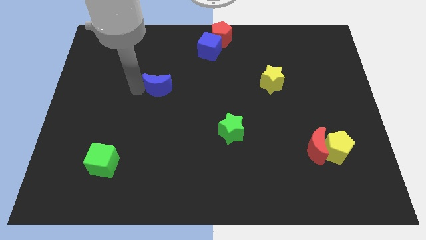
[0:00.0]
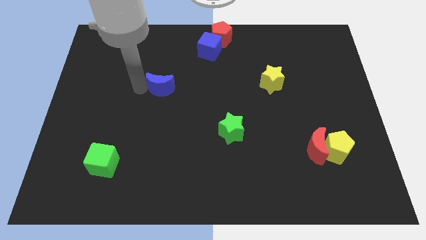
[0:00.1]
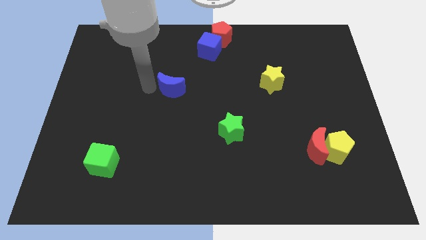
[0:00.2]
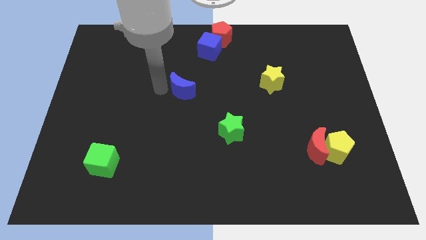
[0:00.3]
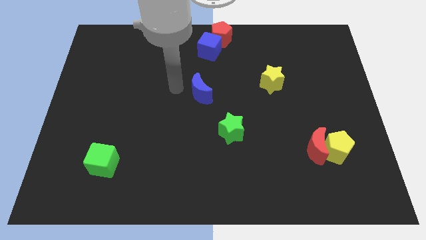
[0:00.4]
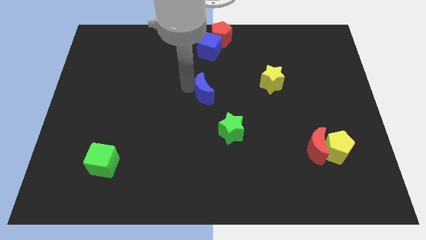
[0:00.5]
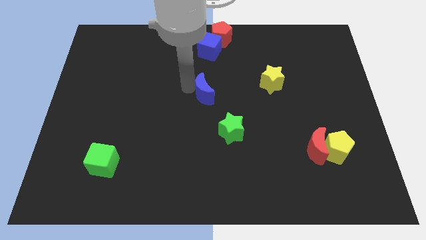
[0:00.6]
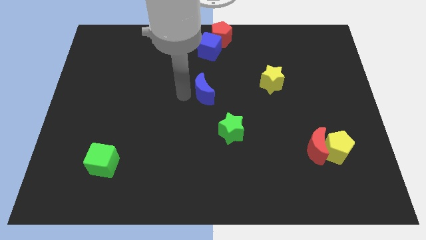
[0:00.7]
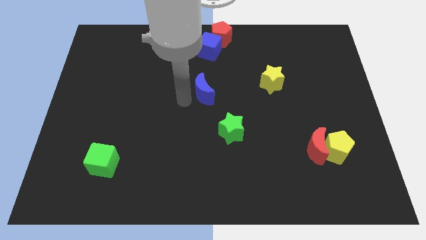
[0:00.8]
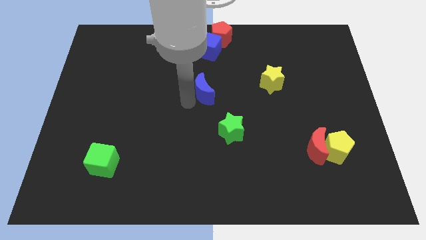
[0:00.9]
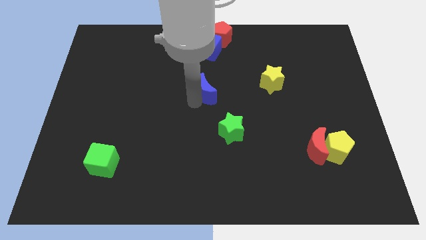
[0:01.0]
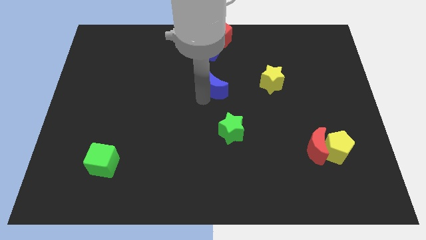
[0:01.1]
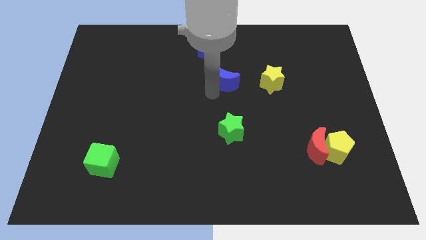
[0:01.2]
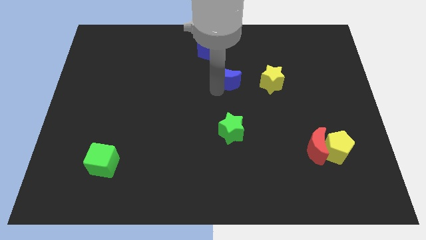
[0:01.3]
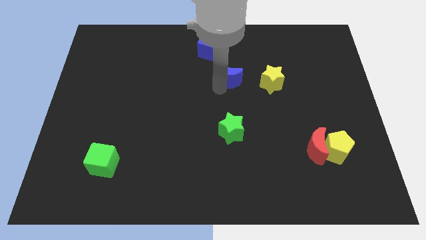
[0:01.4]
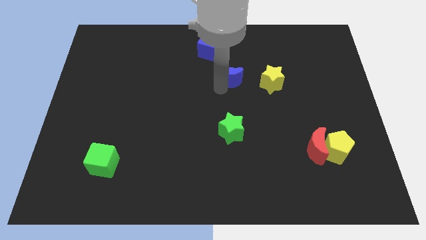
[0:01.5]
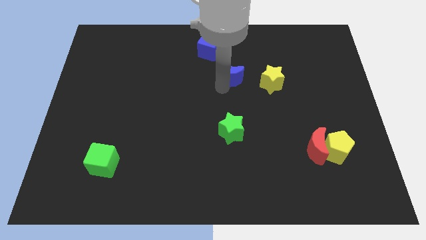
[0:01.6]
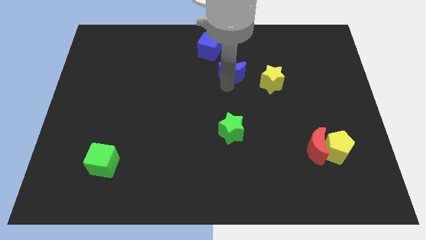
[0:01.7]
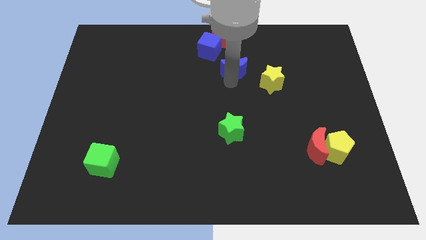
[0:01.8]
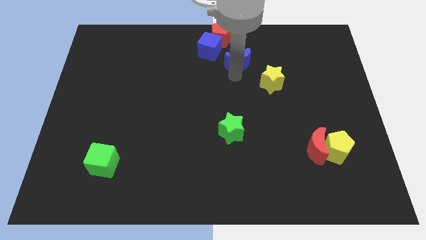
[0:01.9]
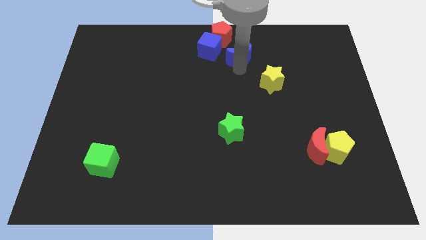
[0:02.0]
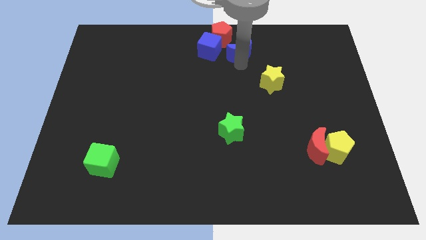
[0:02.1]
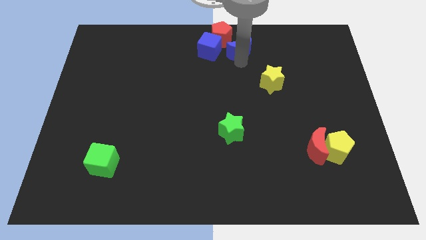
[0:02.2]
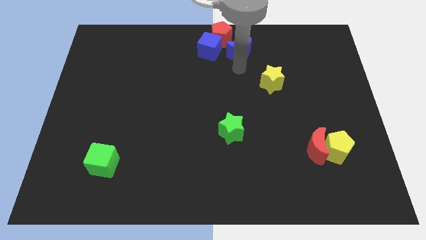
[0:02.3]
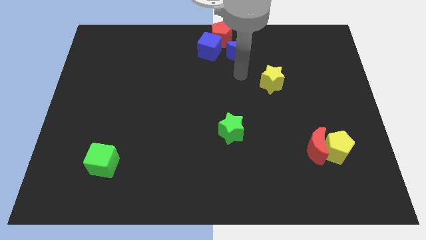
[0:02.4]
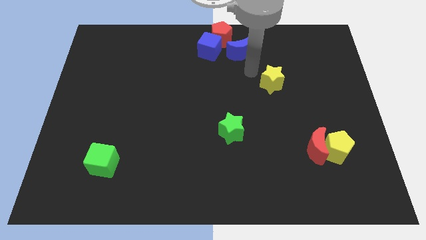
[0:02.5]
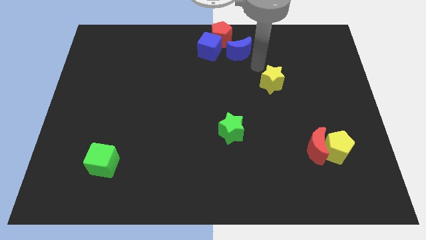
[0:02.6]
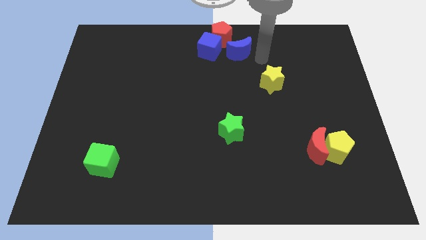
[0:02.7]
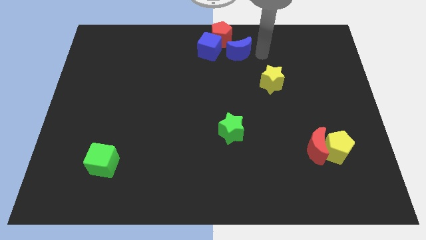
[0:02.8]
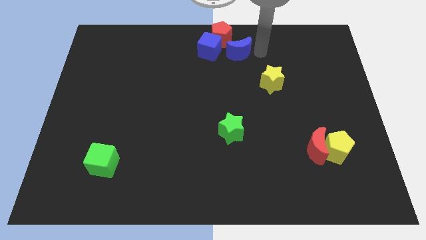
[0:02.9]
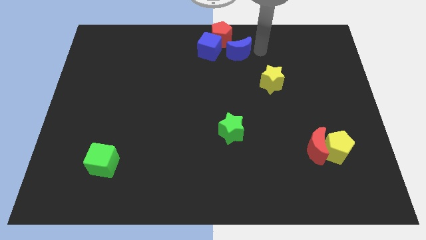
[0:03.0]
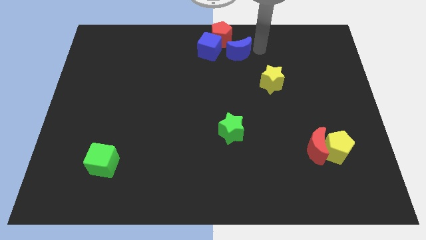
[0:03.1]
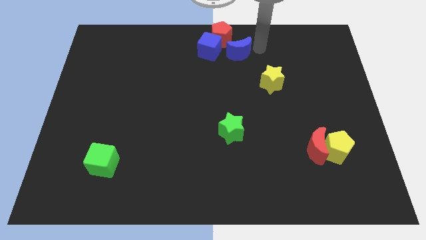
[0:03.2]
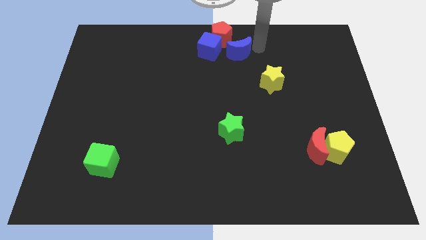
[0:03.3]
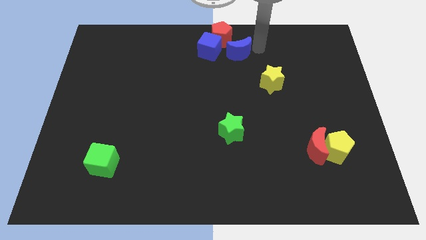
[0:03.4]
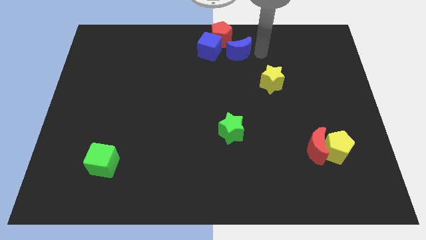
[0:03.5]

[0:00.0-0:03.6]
drag the blue moon close to the red pentagon

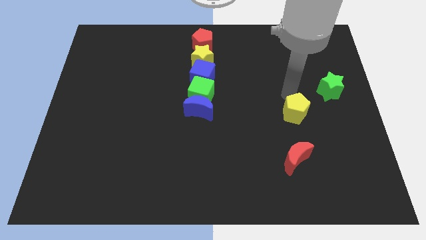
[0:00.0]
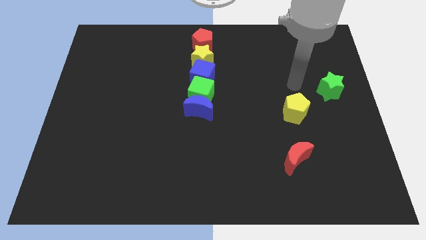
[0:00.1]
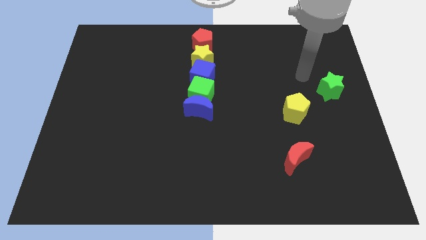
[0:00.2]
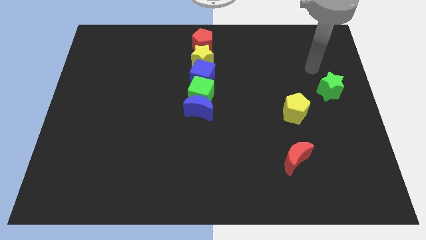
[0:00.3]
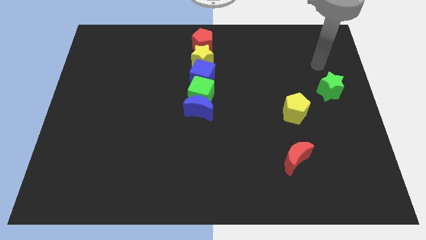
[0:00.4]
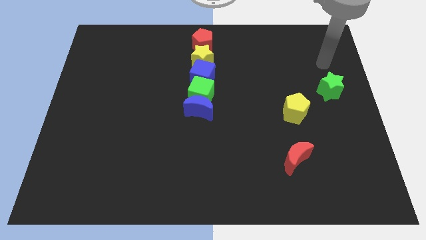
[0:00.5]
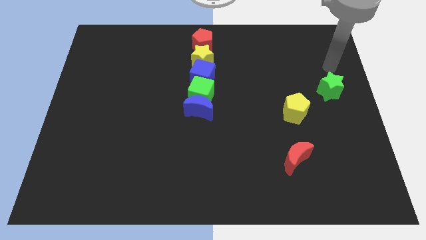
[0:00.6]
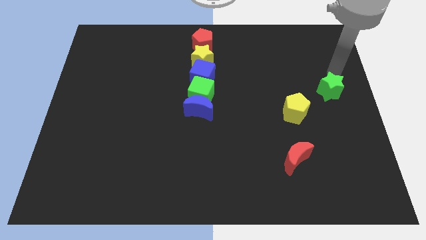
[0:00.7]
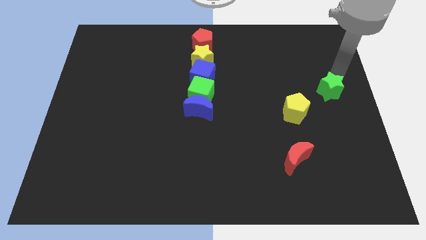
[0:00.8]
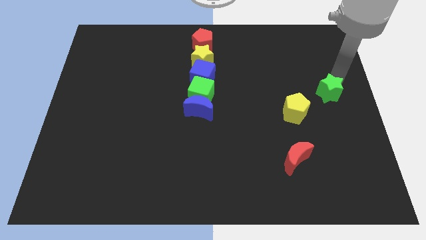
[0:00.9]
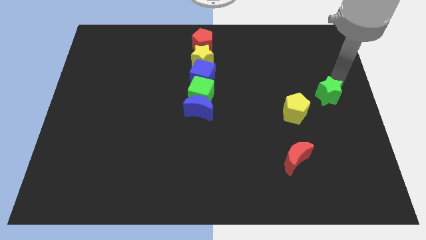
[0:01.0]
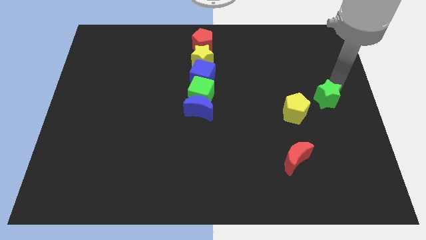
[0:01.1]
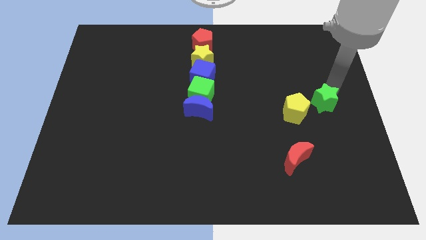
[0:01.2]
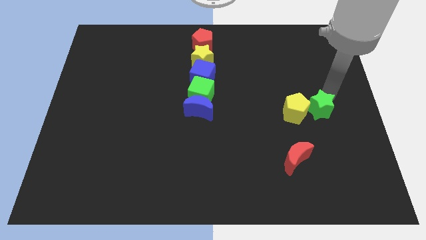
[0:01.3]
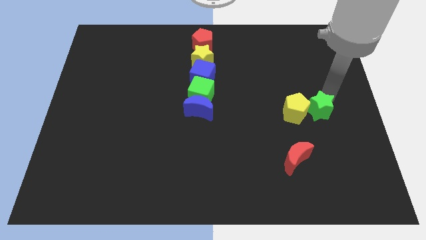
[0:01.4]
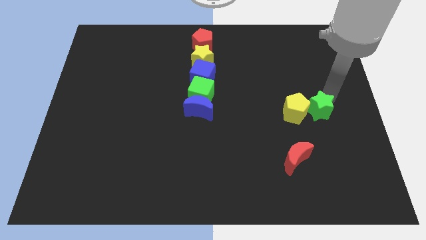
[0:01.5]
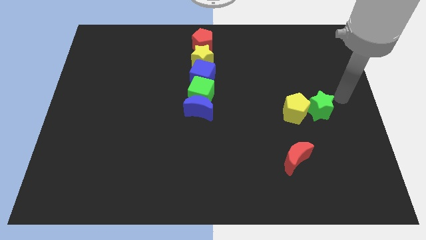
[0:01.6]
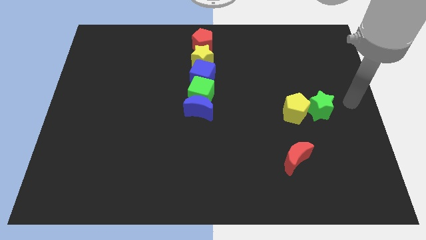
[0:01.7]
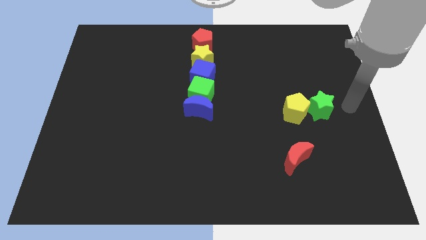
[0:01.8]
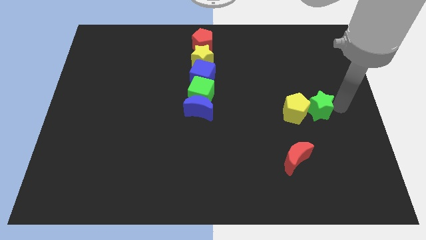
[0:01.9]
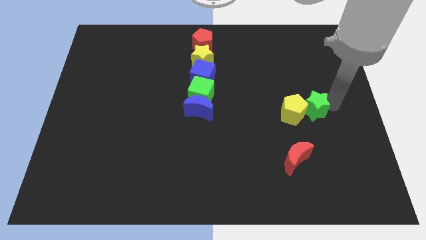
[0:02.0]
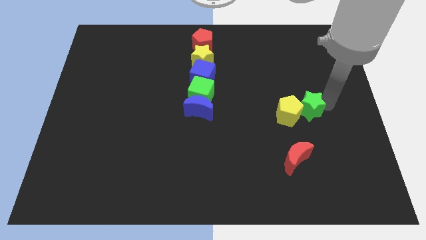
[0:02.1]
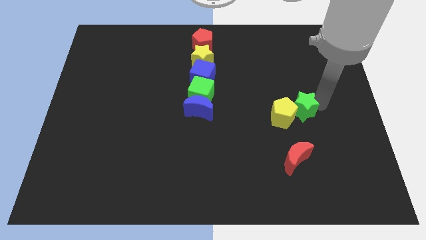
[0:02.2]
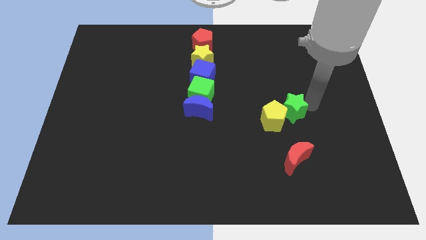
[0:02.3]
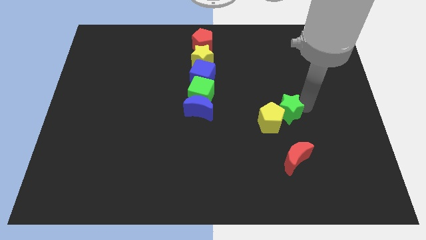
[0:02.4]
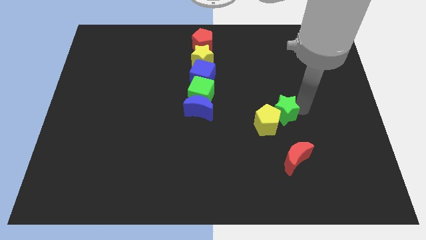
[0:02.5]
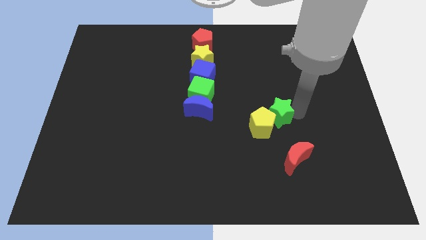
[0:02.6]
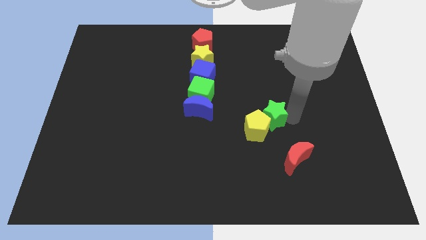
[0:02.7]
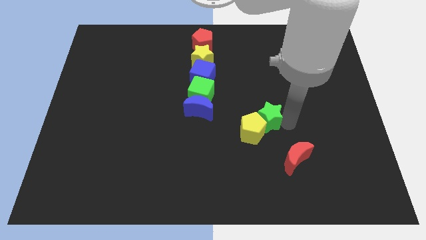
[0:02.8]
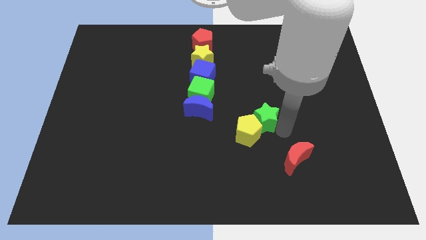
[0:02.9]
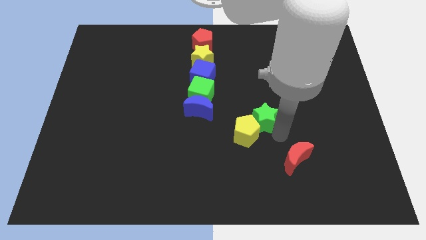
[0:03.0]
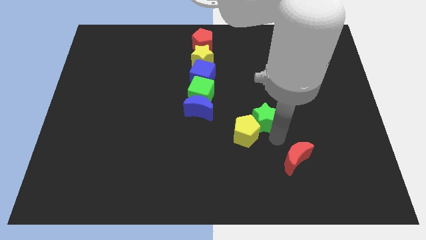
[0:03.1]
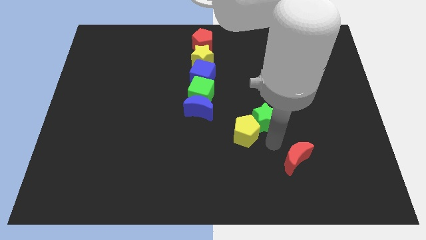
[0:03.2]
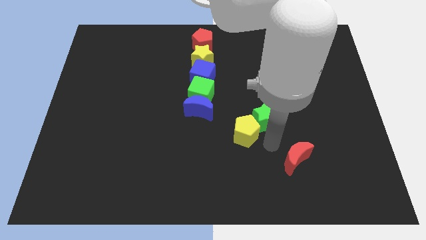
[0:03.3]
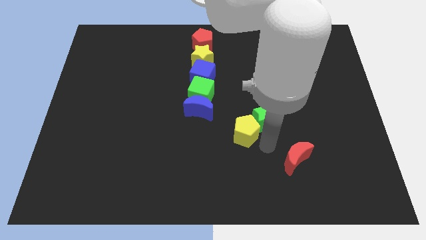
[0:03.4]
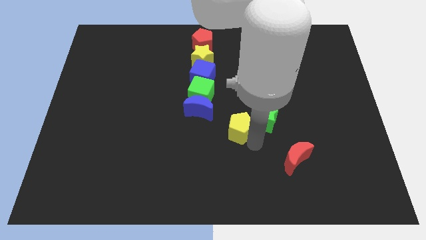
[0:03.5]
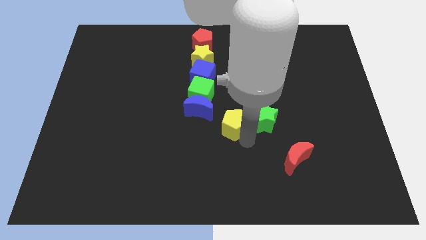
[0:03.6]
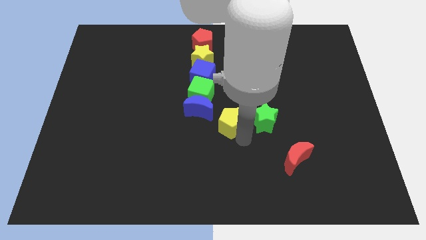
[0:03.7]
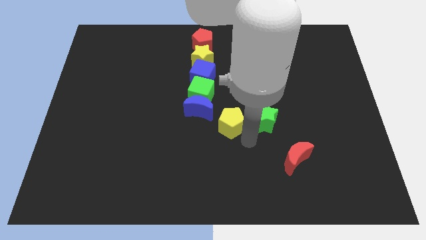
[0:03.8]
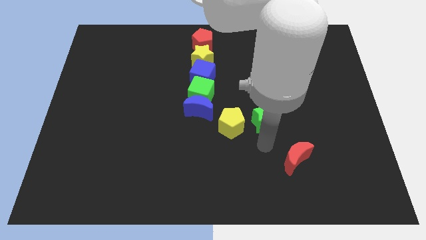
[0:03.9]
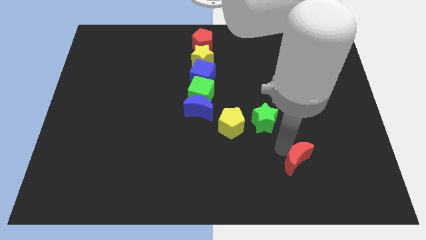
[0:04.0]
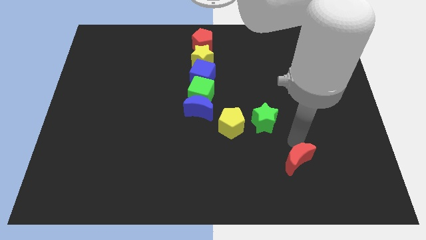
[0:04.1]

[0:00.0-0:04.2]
push the green star into the yellow pentagon

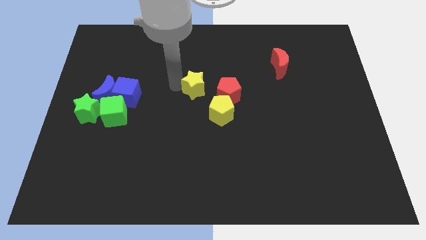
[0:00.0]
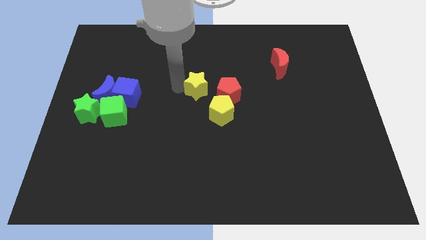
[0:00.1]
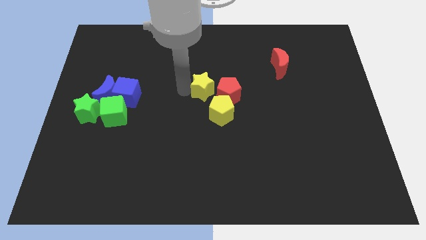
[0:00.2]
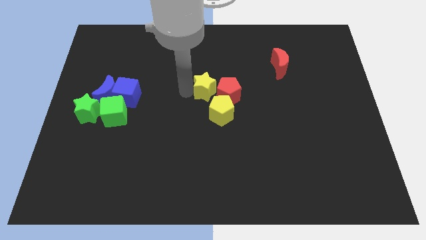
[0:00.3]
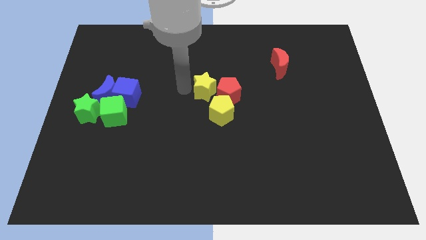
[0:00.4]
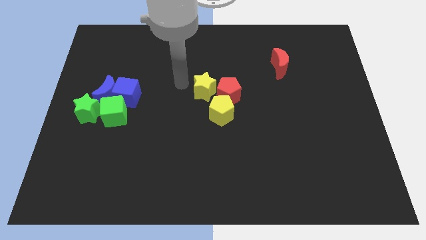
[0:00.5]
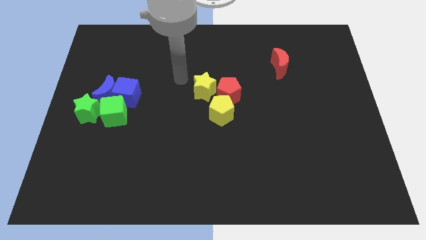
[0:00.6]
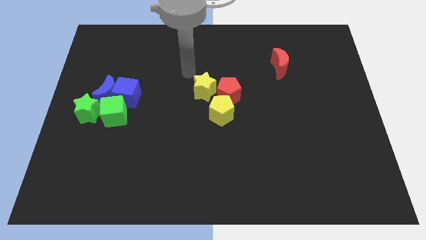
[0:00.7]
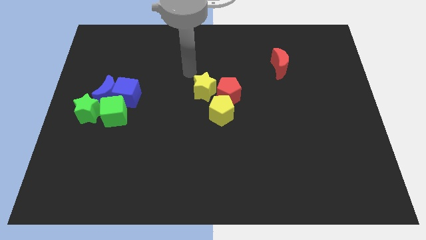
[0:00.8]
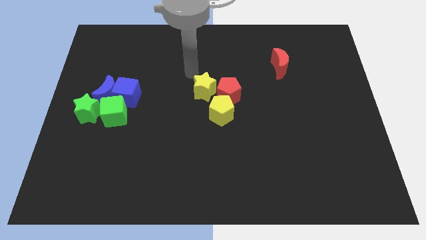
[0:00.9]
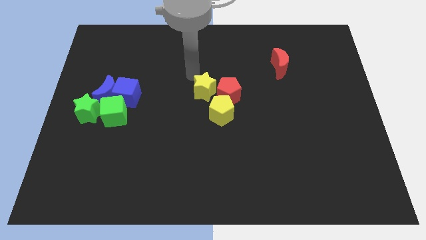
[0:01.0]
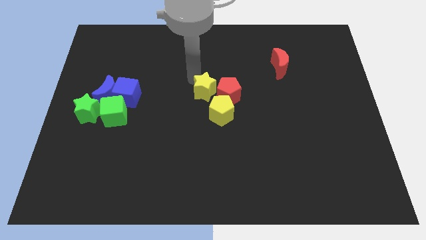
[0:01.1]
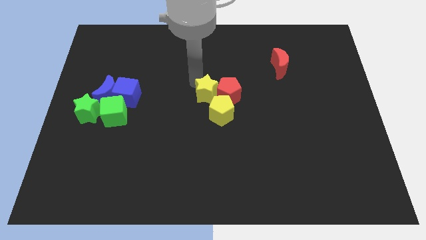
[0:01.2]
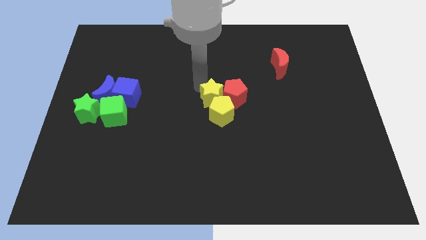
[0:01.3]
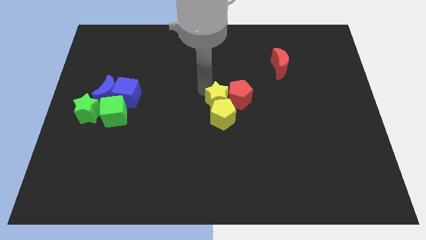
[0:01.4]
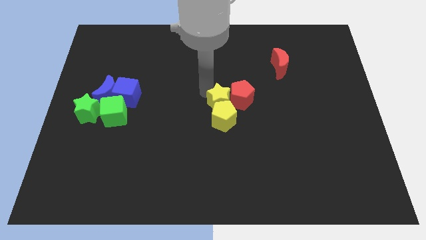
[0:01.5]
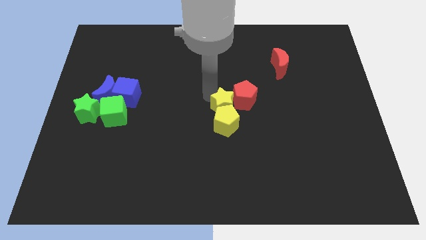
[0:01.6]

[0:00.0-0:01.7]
move yellow star to the top of yellow pentagon
